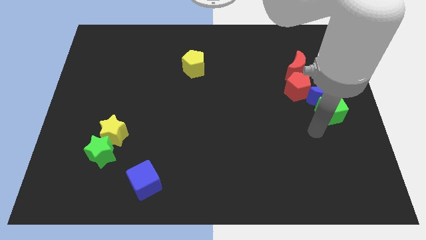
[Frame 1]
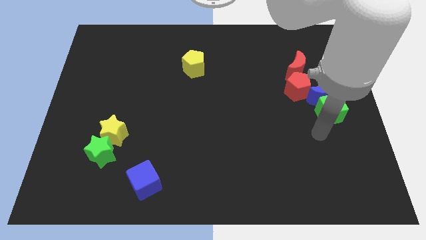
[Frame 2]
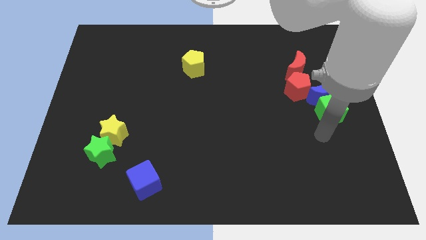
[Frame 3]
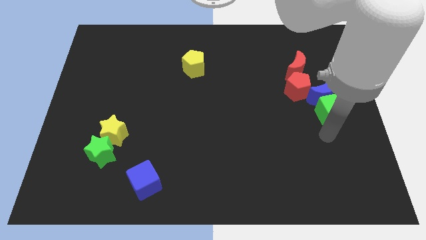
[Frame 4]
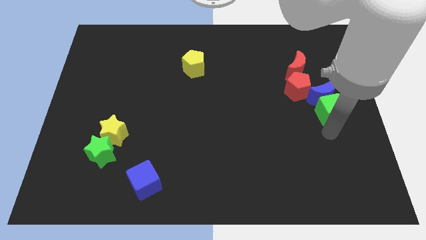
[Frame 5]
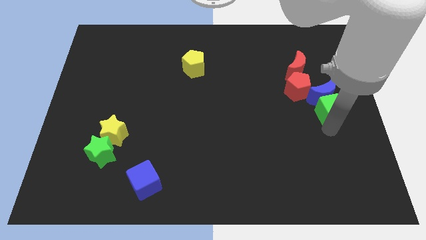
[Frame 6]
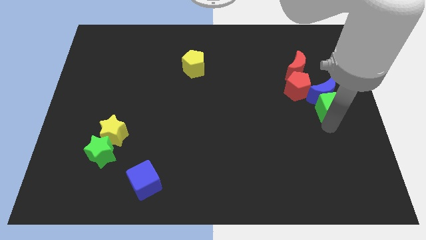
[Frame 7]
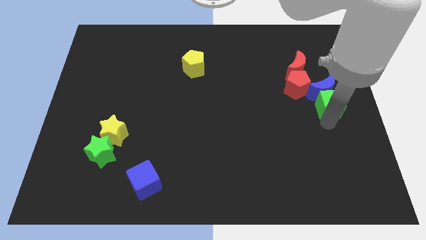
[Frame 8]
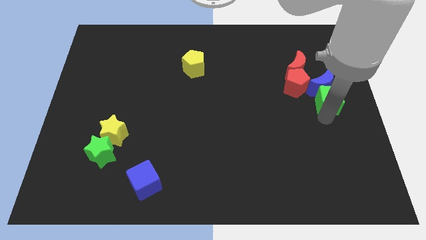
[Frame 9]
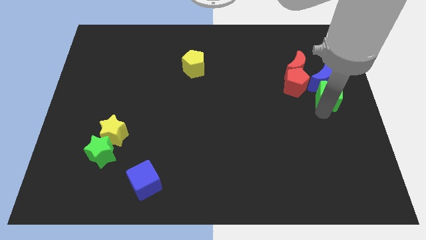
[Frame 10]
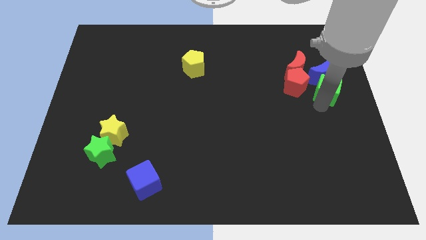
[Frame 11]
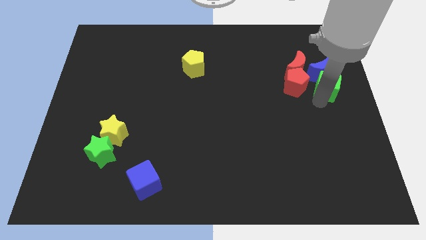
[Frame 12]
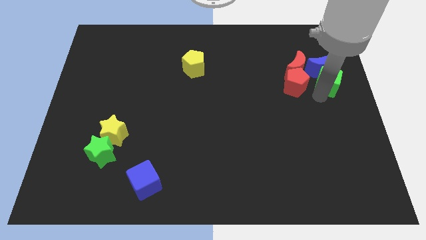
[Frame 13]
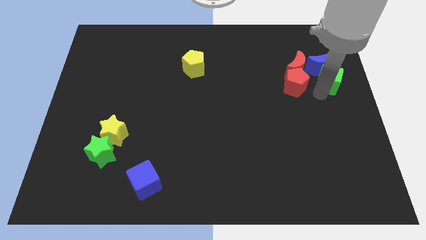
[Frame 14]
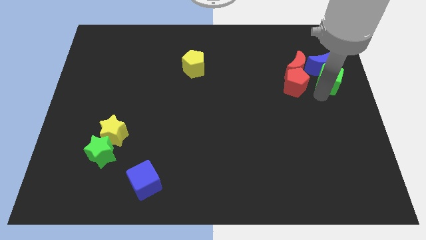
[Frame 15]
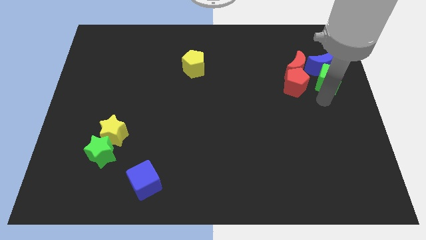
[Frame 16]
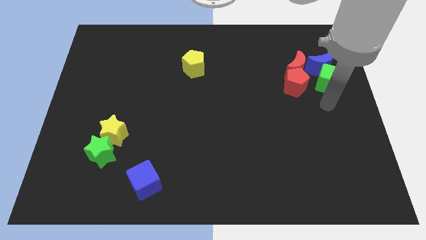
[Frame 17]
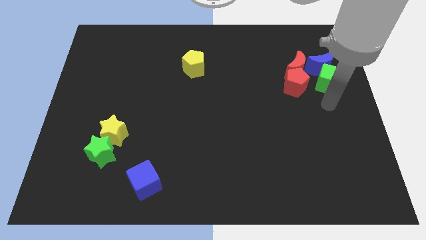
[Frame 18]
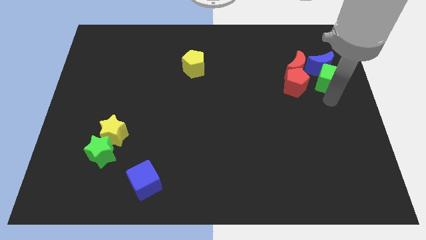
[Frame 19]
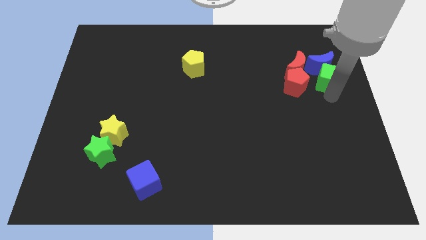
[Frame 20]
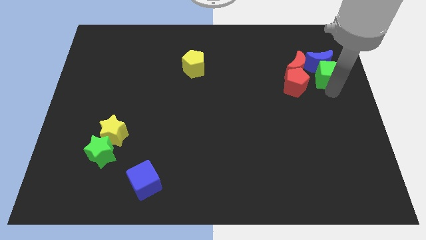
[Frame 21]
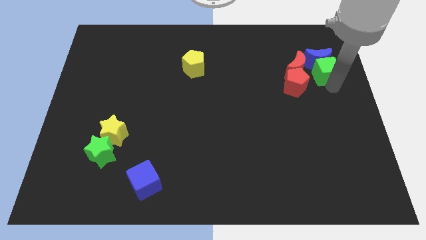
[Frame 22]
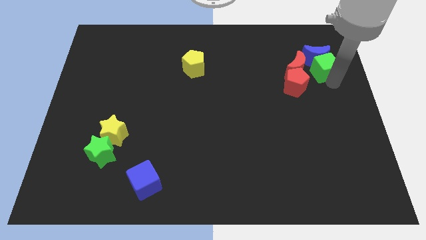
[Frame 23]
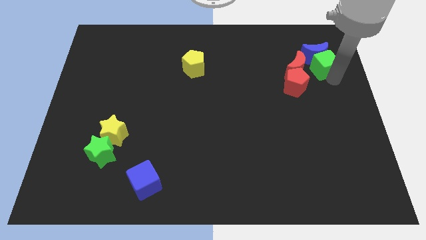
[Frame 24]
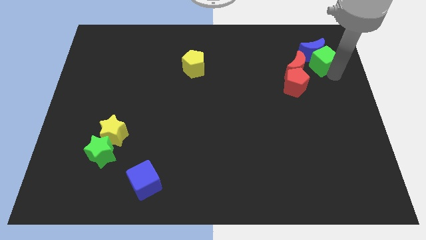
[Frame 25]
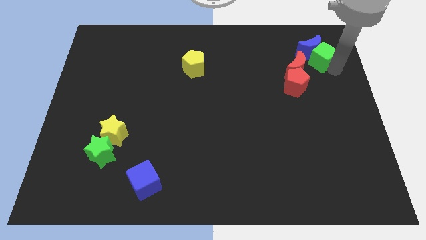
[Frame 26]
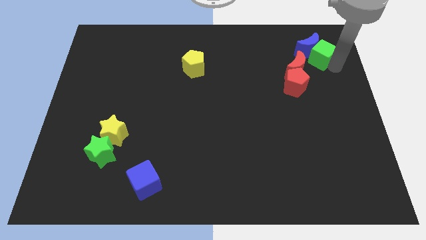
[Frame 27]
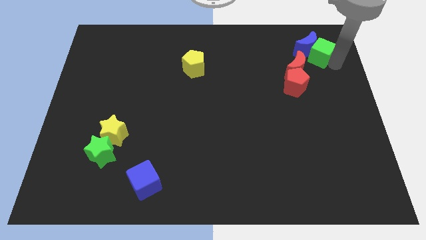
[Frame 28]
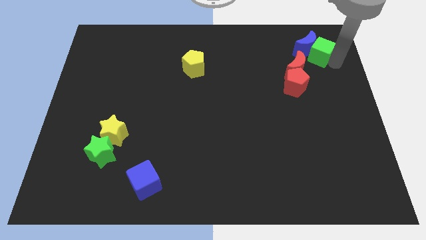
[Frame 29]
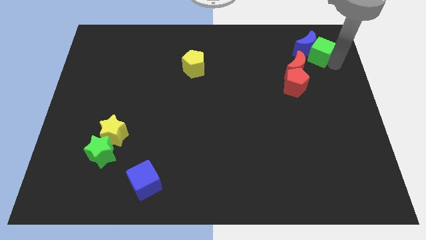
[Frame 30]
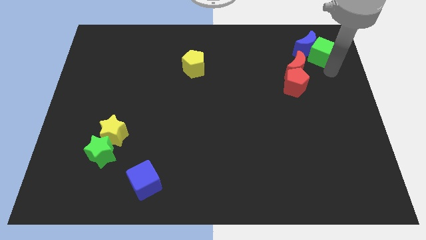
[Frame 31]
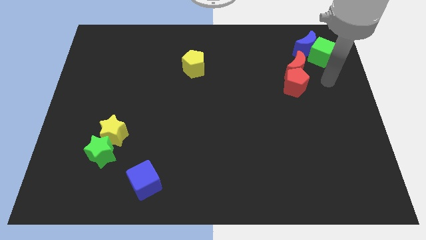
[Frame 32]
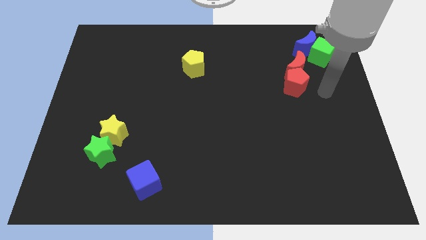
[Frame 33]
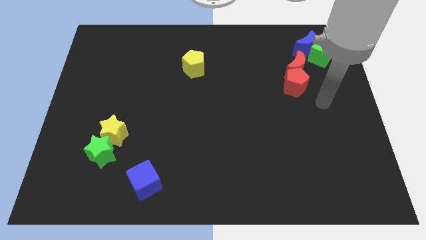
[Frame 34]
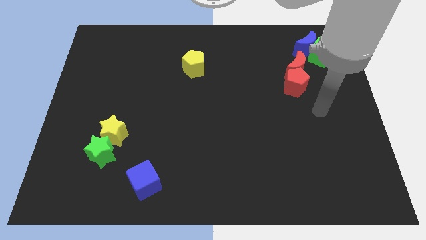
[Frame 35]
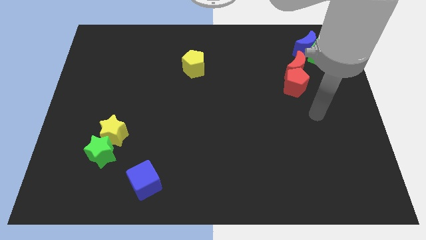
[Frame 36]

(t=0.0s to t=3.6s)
push the green cube slightly towards up

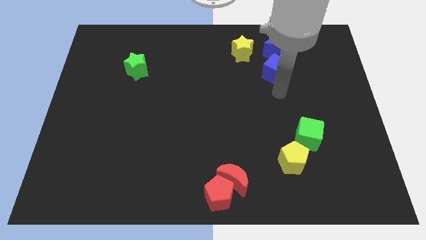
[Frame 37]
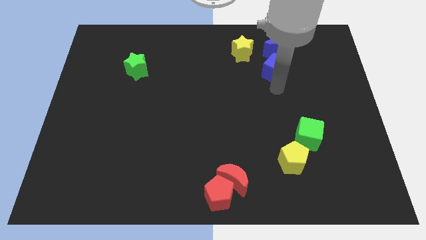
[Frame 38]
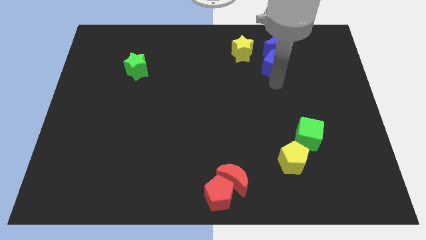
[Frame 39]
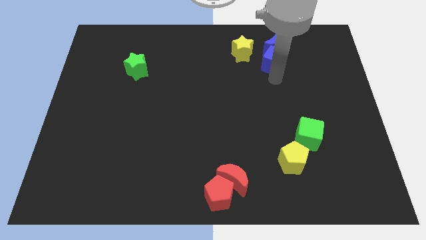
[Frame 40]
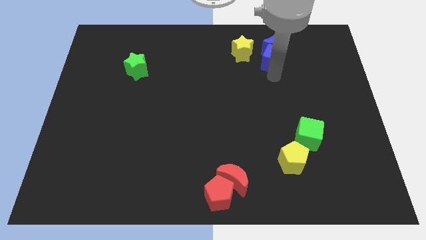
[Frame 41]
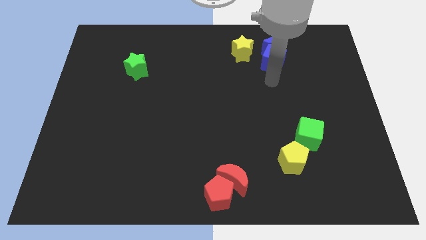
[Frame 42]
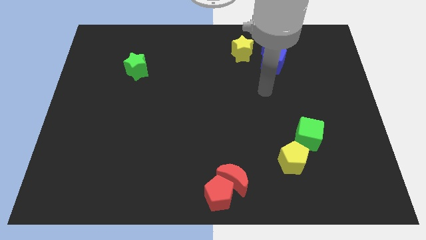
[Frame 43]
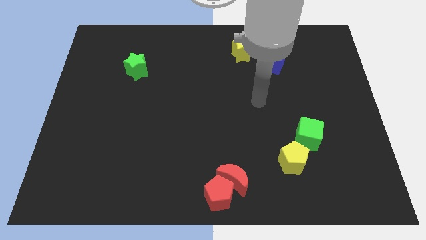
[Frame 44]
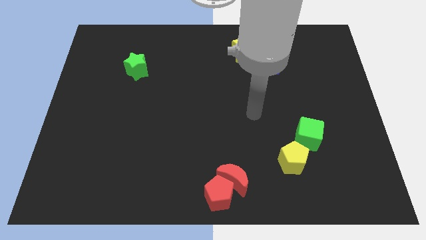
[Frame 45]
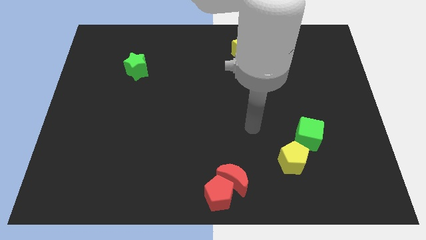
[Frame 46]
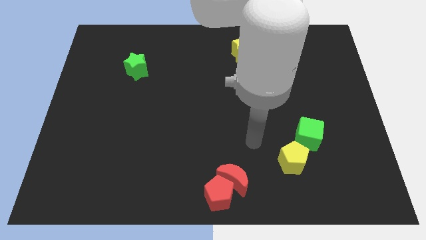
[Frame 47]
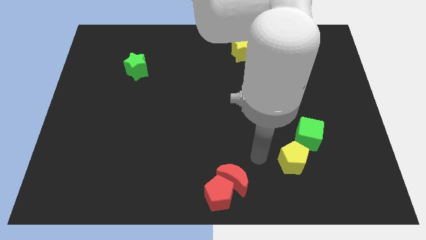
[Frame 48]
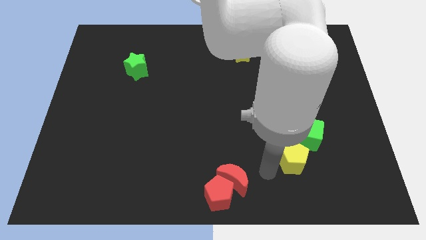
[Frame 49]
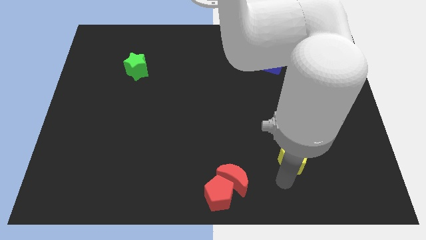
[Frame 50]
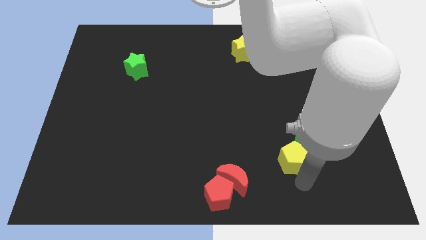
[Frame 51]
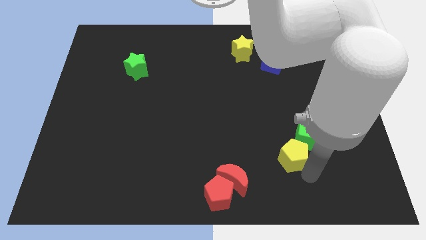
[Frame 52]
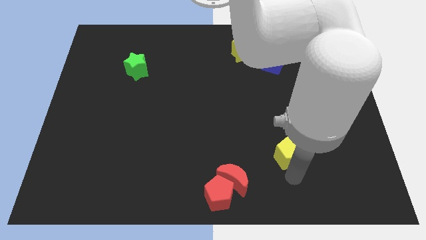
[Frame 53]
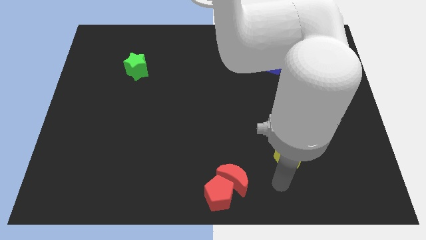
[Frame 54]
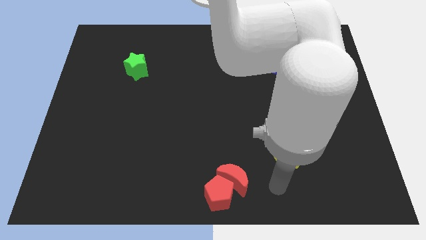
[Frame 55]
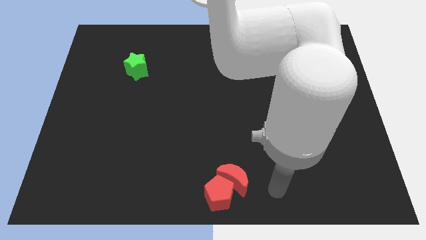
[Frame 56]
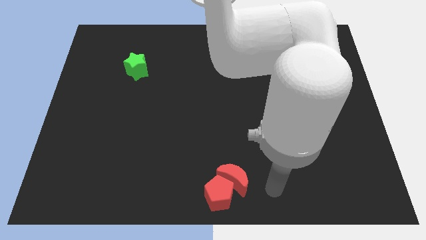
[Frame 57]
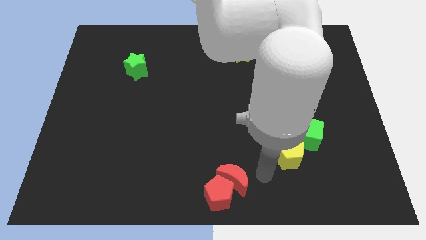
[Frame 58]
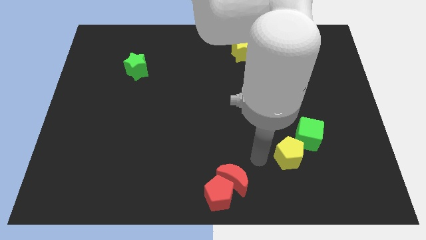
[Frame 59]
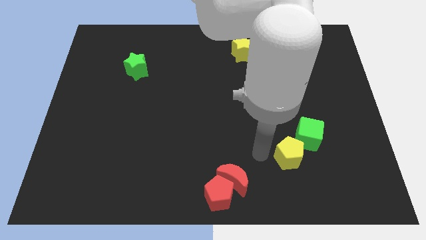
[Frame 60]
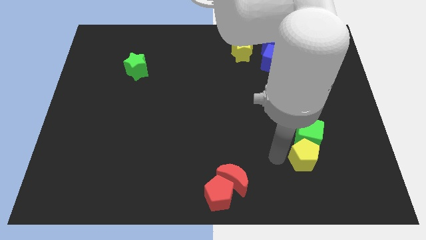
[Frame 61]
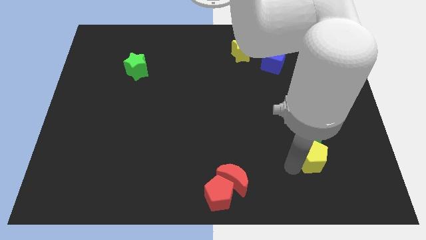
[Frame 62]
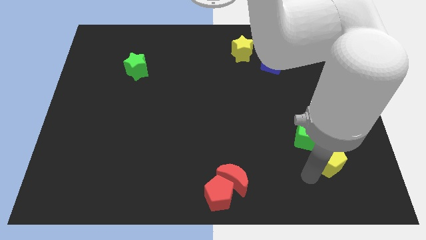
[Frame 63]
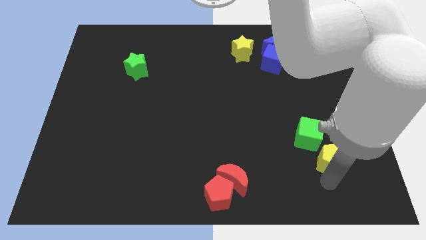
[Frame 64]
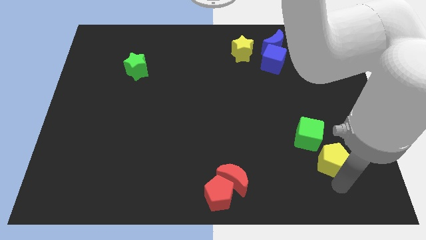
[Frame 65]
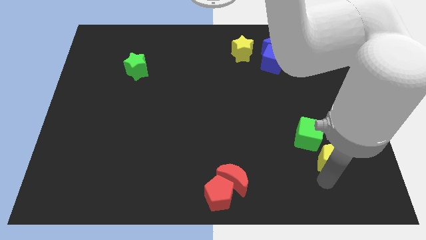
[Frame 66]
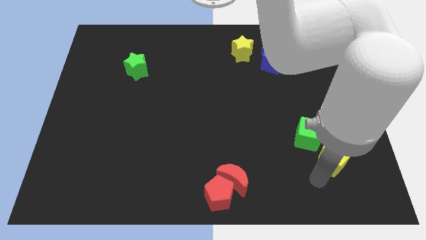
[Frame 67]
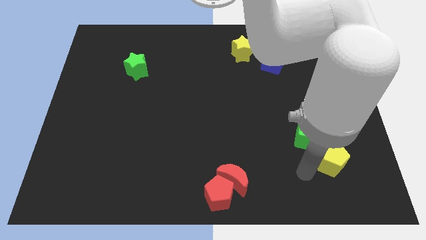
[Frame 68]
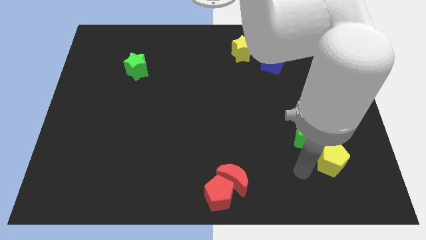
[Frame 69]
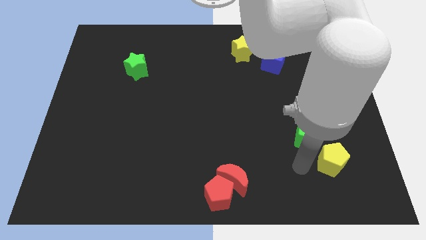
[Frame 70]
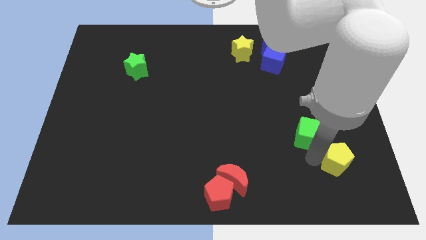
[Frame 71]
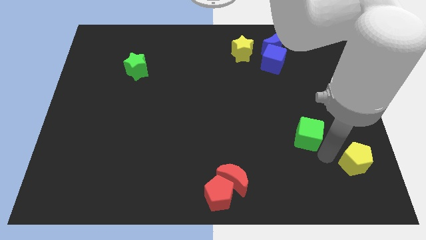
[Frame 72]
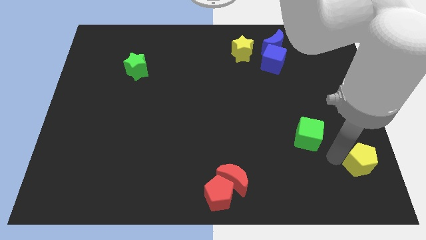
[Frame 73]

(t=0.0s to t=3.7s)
separate the green cube and yellow pentagon

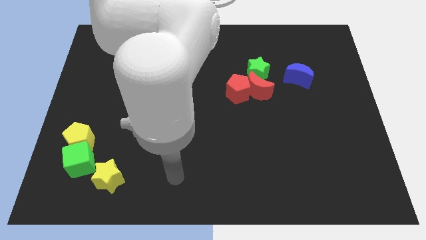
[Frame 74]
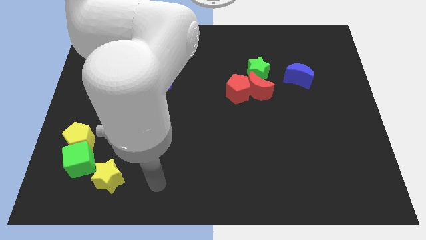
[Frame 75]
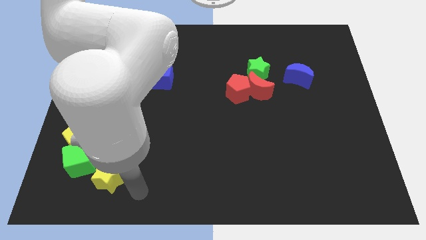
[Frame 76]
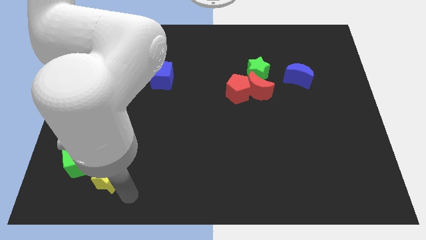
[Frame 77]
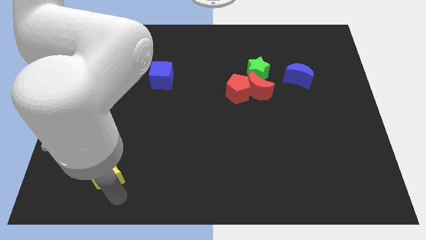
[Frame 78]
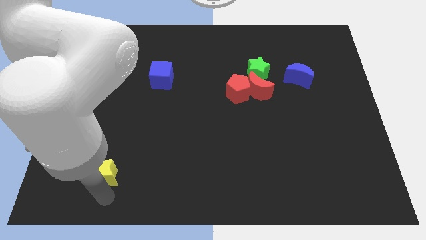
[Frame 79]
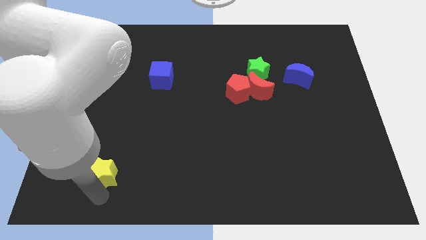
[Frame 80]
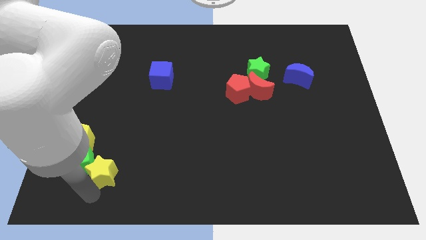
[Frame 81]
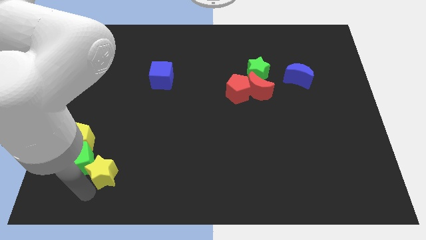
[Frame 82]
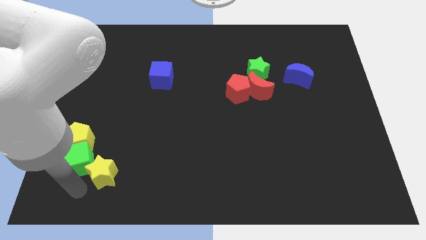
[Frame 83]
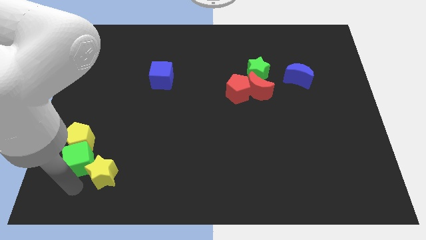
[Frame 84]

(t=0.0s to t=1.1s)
slide yellow star into green cube

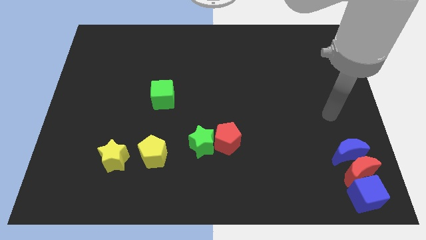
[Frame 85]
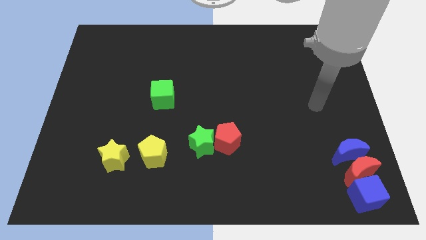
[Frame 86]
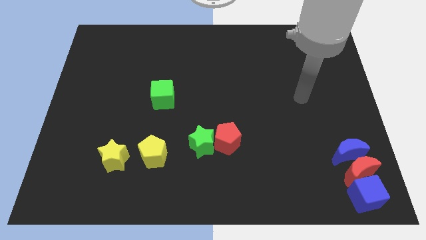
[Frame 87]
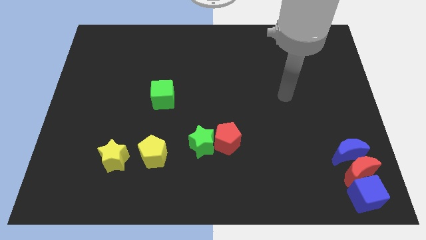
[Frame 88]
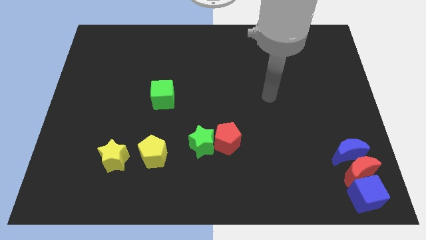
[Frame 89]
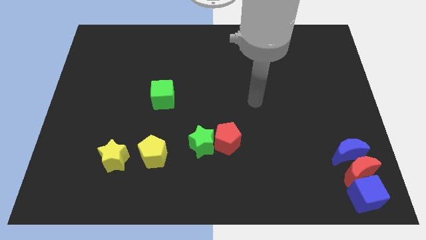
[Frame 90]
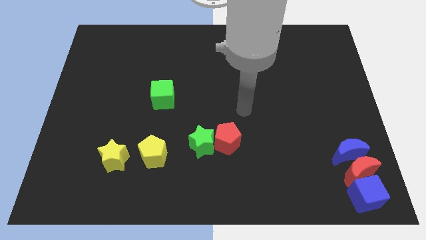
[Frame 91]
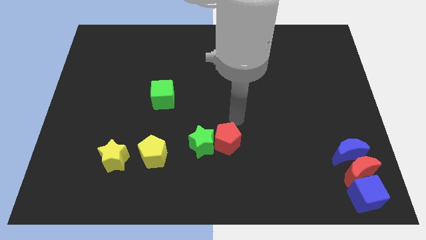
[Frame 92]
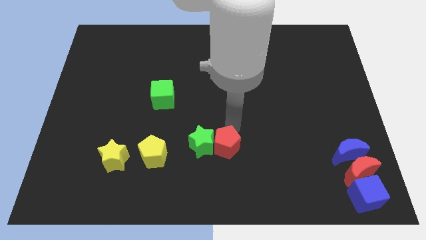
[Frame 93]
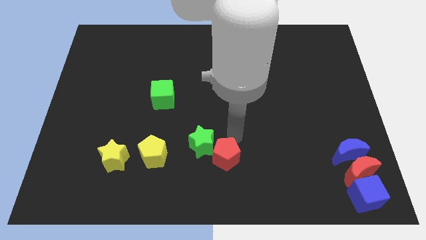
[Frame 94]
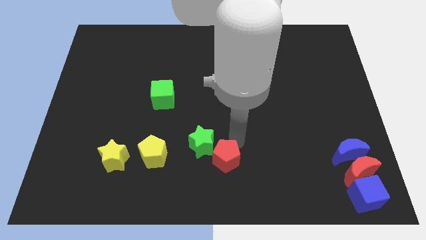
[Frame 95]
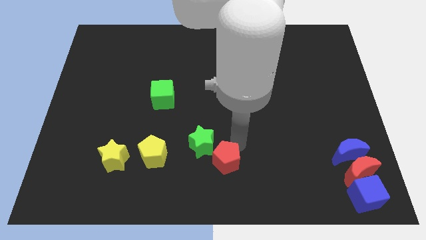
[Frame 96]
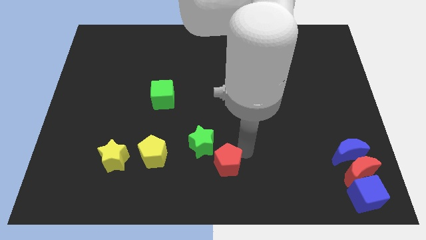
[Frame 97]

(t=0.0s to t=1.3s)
move the red pentagon slightly towards the bottom center
